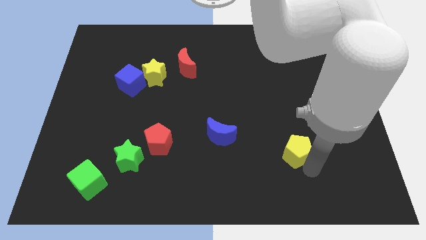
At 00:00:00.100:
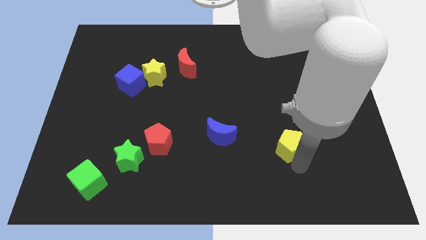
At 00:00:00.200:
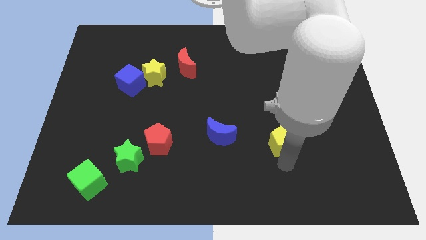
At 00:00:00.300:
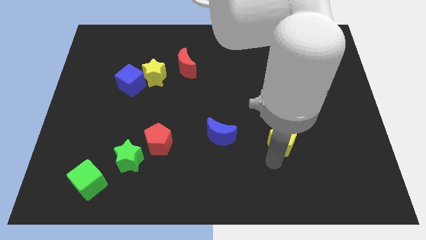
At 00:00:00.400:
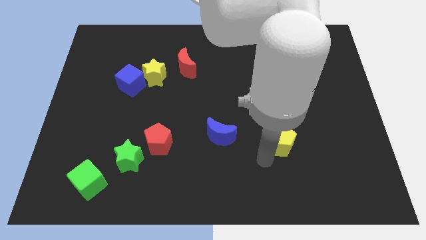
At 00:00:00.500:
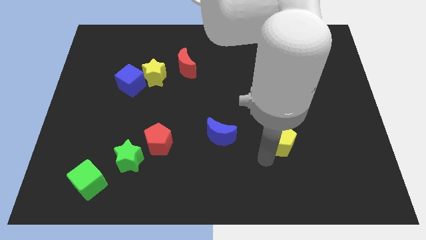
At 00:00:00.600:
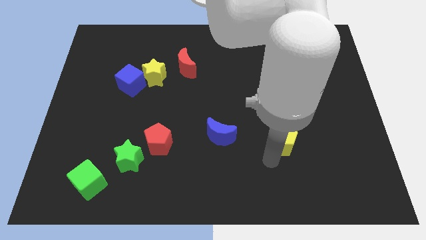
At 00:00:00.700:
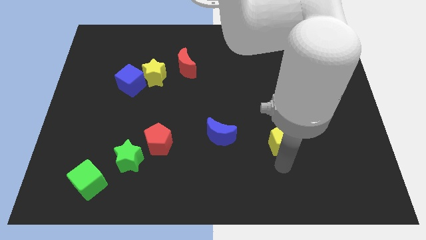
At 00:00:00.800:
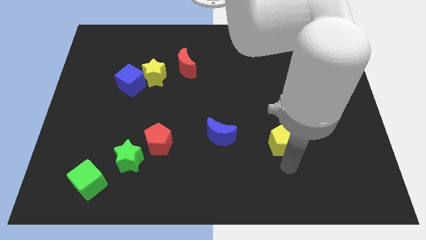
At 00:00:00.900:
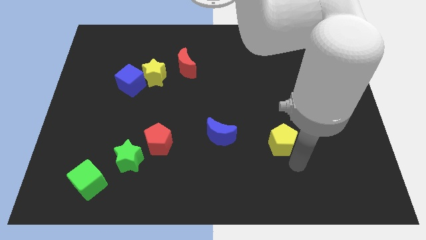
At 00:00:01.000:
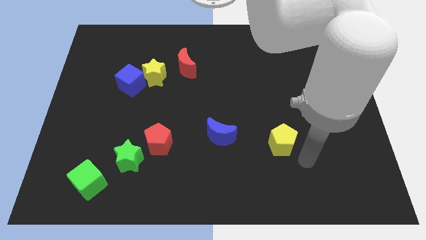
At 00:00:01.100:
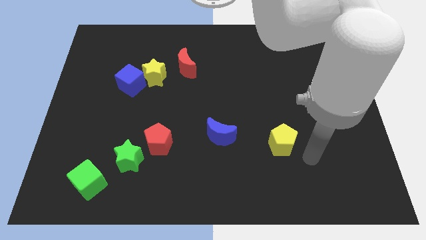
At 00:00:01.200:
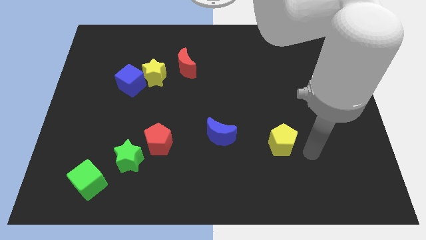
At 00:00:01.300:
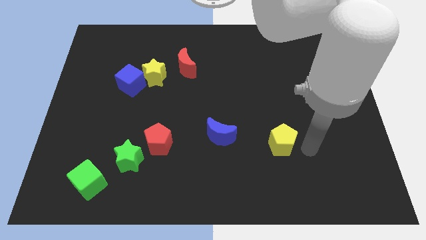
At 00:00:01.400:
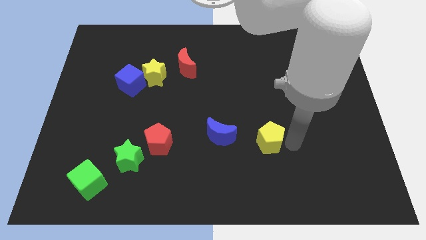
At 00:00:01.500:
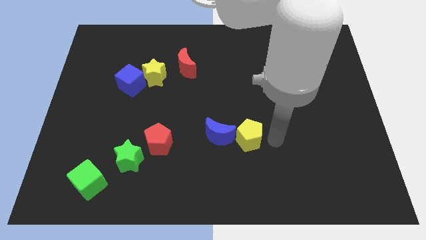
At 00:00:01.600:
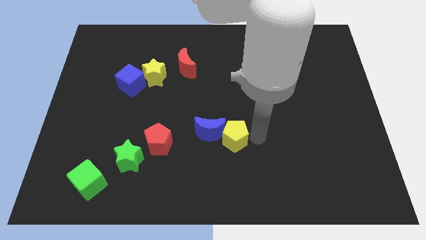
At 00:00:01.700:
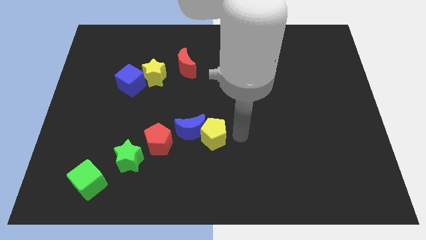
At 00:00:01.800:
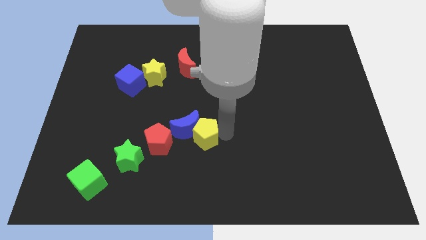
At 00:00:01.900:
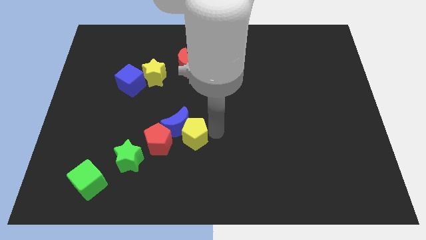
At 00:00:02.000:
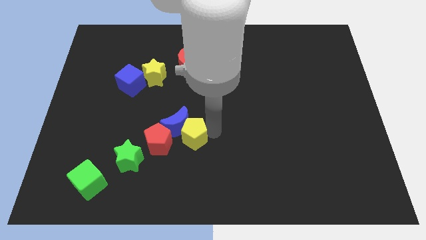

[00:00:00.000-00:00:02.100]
move yellow pentagon towards the center

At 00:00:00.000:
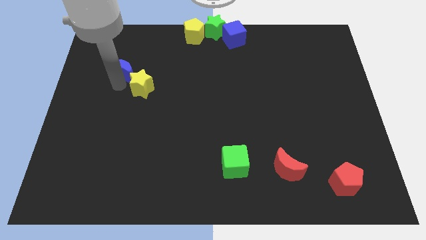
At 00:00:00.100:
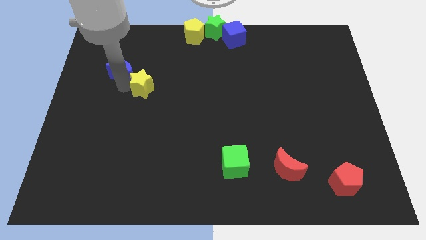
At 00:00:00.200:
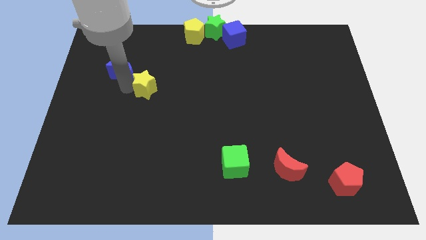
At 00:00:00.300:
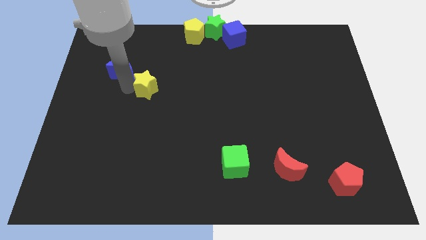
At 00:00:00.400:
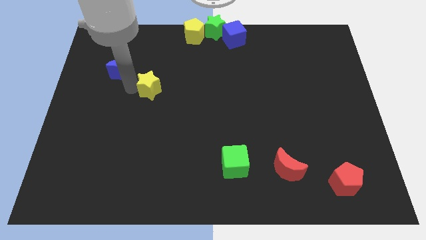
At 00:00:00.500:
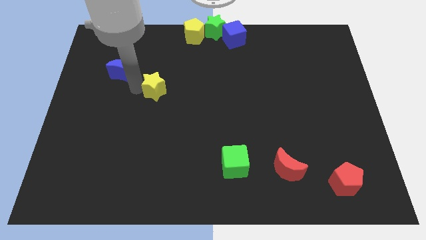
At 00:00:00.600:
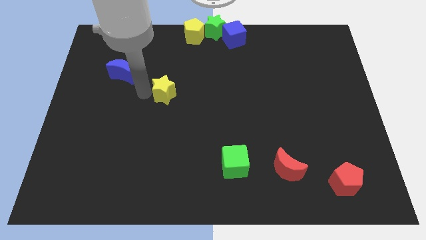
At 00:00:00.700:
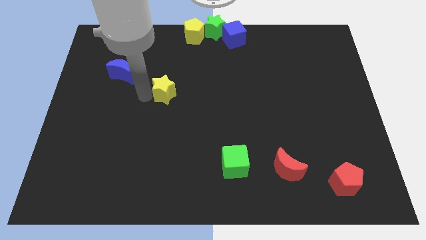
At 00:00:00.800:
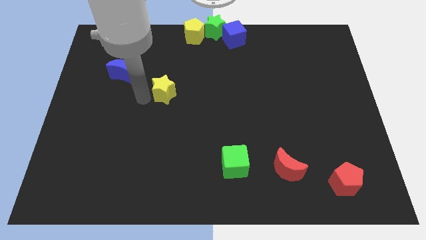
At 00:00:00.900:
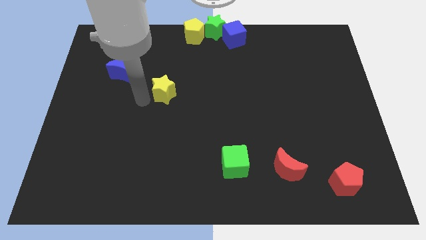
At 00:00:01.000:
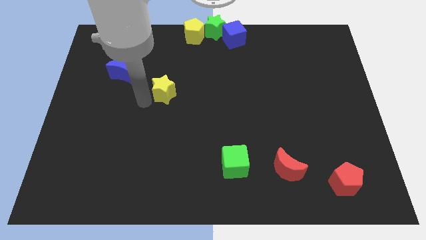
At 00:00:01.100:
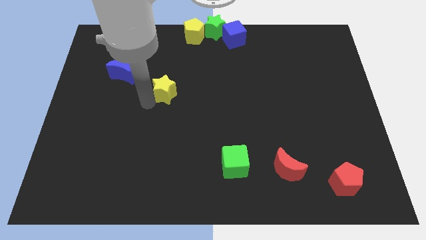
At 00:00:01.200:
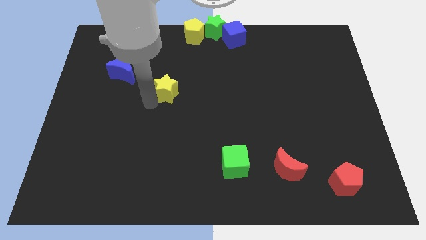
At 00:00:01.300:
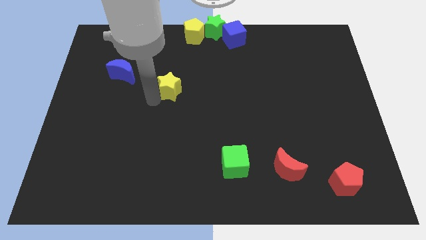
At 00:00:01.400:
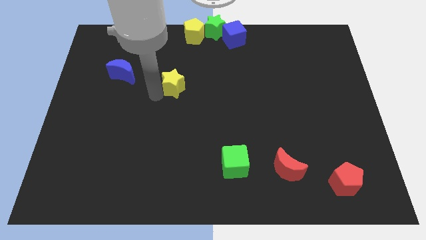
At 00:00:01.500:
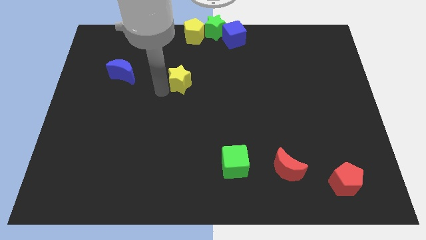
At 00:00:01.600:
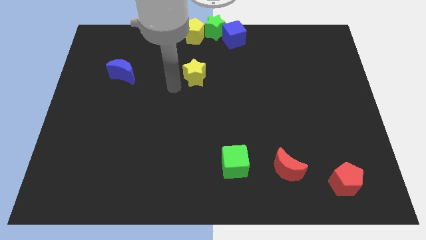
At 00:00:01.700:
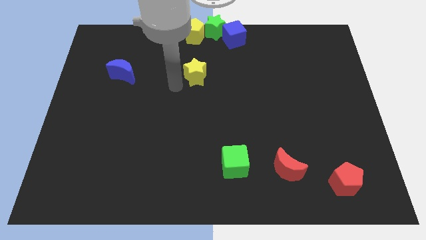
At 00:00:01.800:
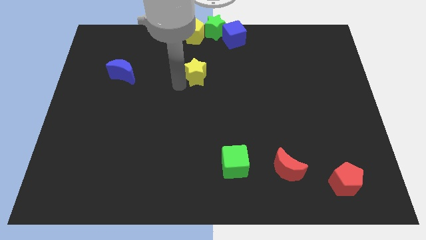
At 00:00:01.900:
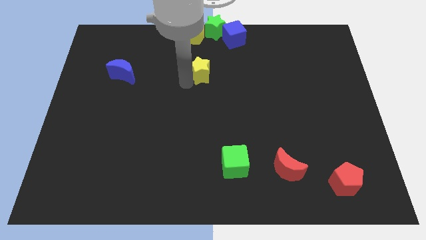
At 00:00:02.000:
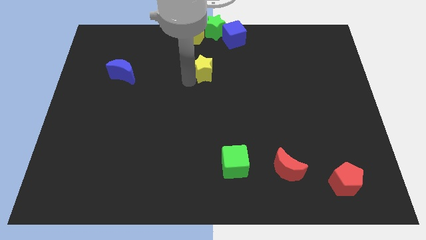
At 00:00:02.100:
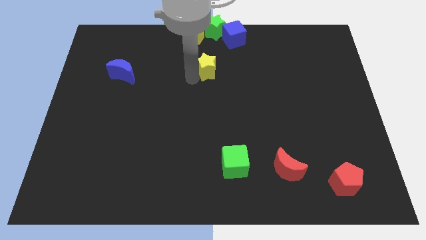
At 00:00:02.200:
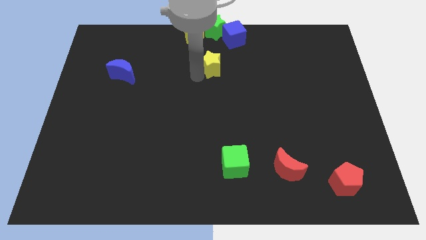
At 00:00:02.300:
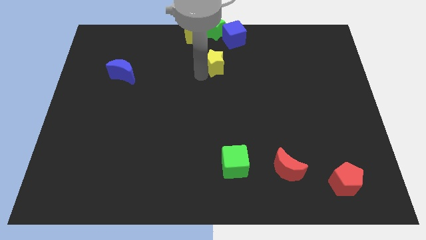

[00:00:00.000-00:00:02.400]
place the yellow star below the green star

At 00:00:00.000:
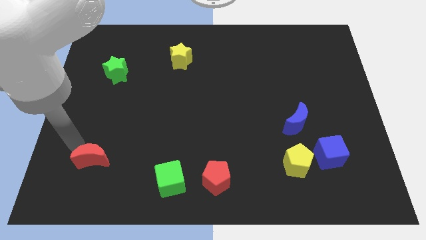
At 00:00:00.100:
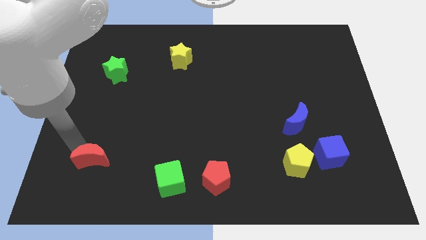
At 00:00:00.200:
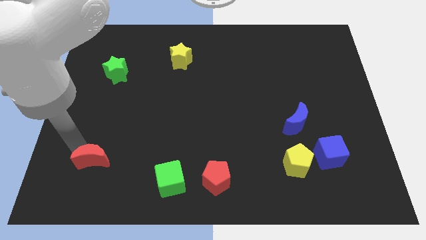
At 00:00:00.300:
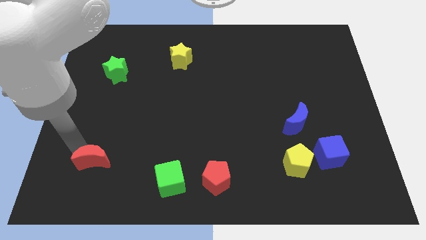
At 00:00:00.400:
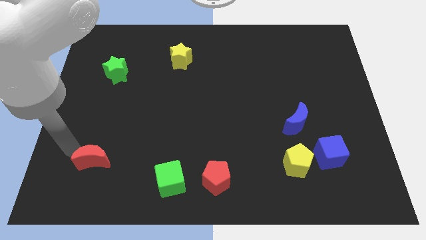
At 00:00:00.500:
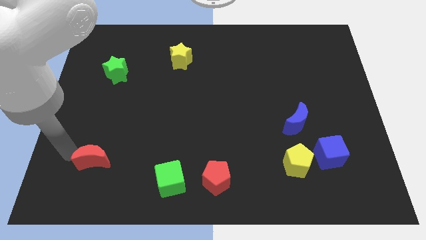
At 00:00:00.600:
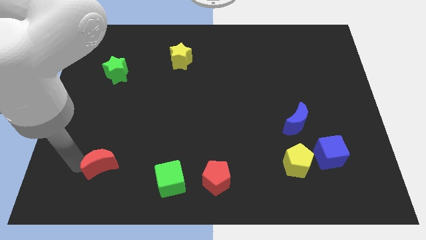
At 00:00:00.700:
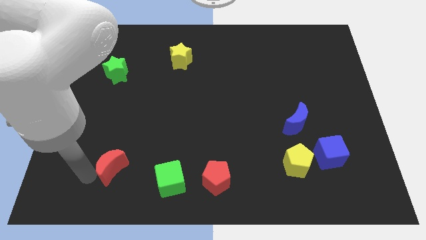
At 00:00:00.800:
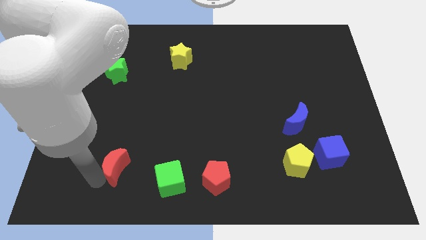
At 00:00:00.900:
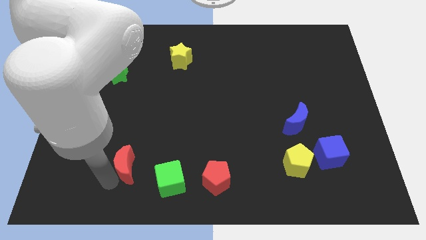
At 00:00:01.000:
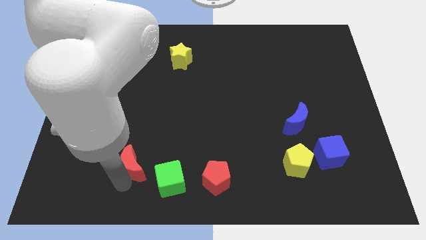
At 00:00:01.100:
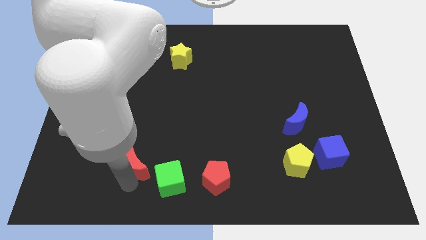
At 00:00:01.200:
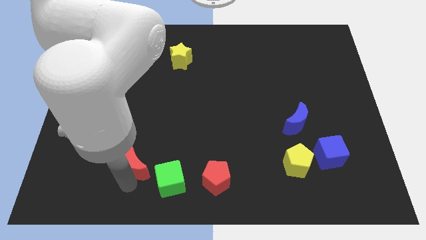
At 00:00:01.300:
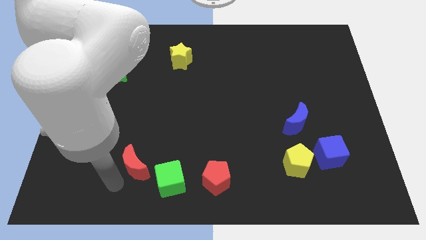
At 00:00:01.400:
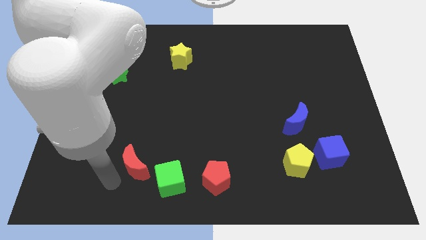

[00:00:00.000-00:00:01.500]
slightly push the red moon

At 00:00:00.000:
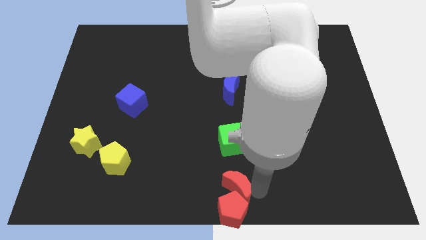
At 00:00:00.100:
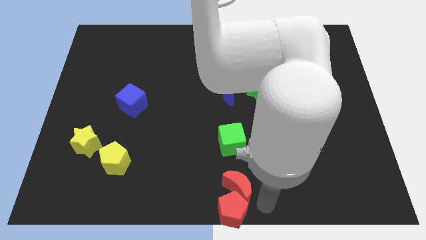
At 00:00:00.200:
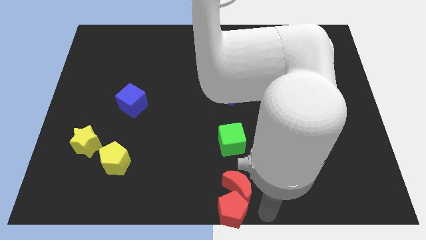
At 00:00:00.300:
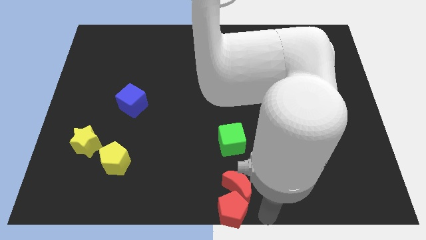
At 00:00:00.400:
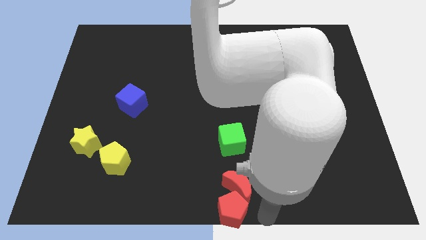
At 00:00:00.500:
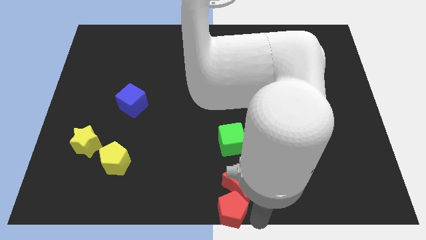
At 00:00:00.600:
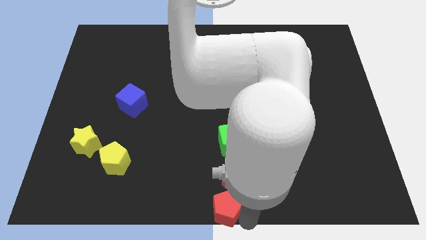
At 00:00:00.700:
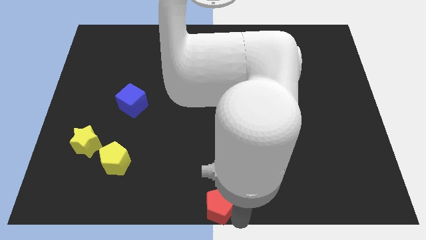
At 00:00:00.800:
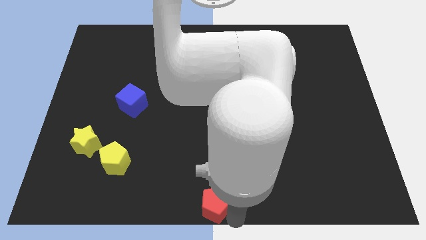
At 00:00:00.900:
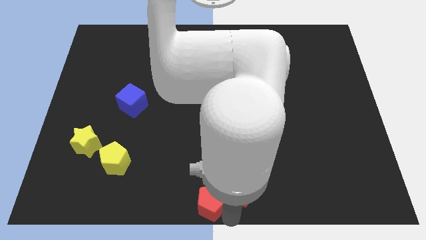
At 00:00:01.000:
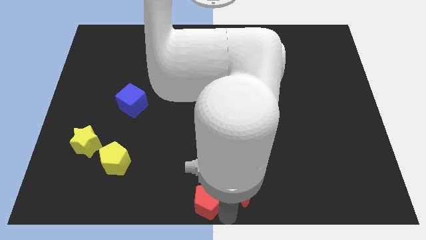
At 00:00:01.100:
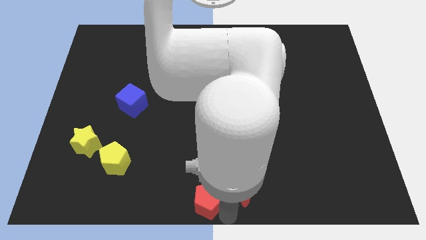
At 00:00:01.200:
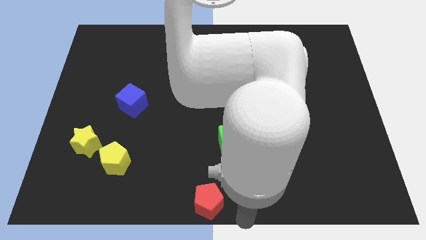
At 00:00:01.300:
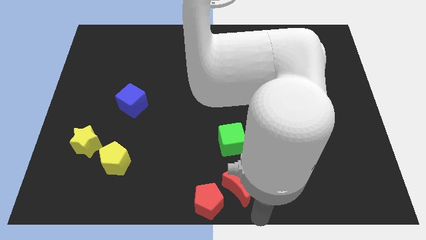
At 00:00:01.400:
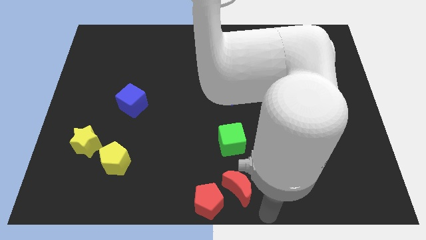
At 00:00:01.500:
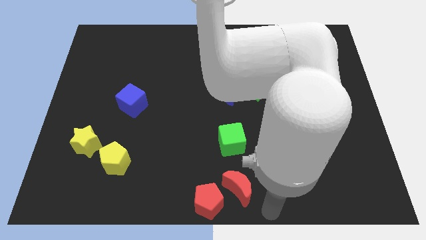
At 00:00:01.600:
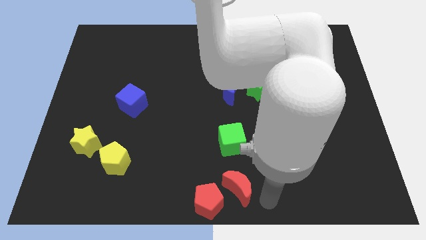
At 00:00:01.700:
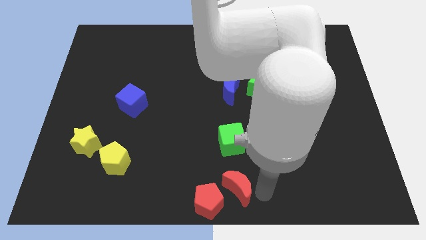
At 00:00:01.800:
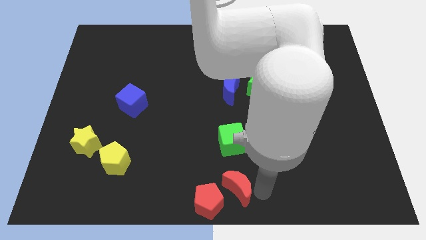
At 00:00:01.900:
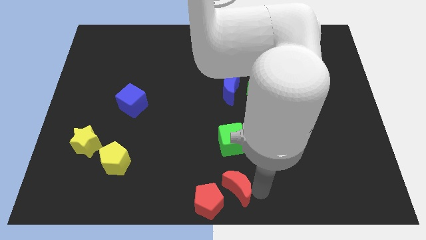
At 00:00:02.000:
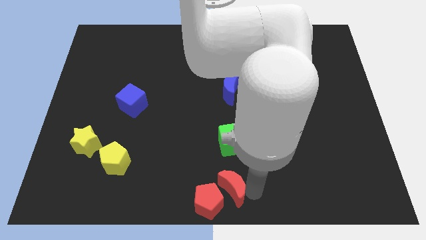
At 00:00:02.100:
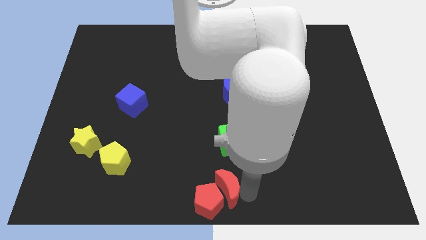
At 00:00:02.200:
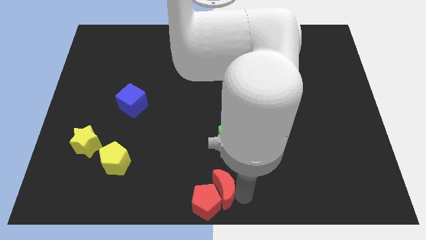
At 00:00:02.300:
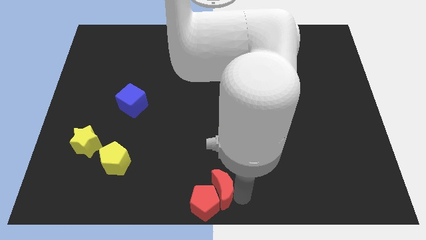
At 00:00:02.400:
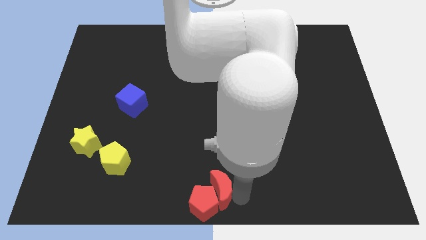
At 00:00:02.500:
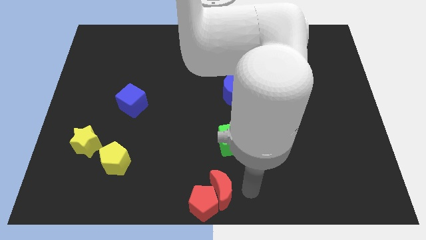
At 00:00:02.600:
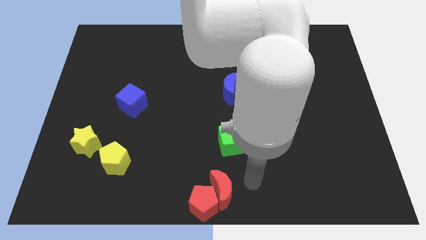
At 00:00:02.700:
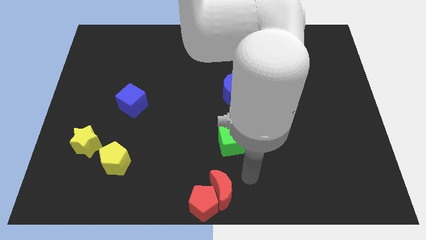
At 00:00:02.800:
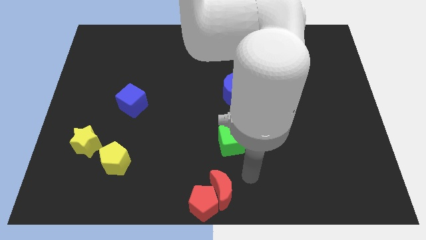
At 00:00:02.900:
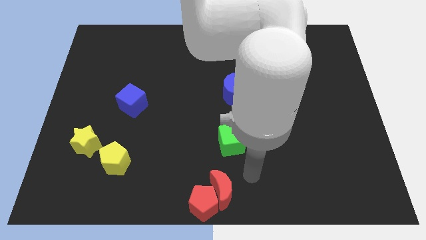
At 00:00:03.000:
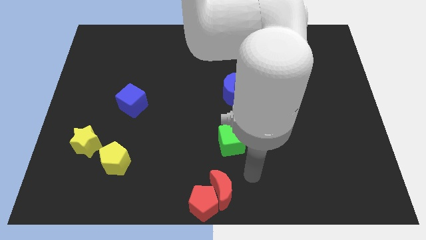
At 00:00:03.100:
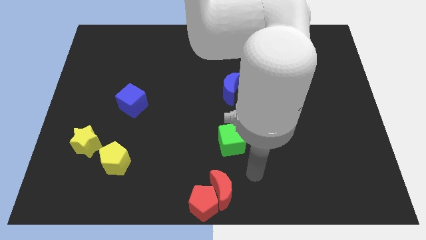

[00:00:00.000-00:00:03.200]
push the red blocks slightly to the left
